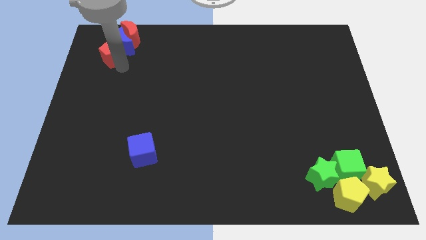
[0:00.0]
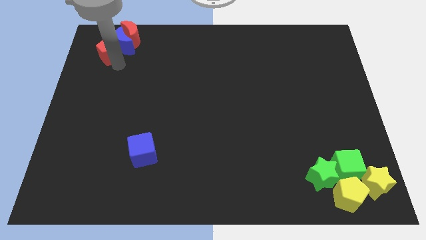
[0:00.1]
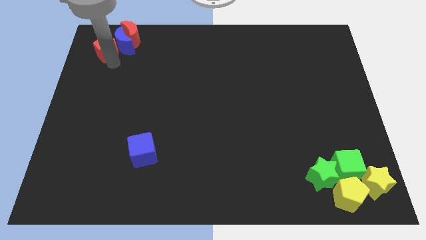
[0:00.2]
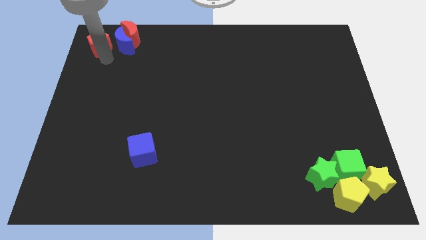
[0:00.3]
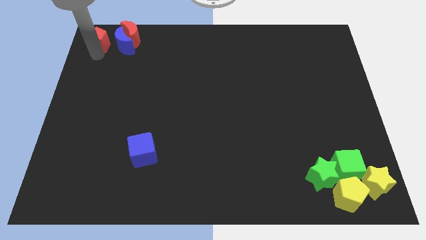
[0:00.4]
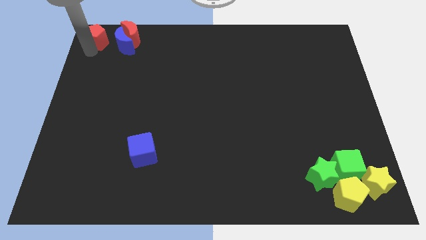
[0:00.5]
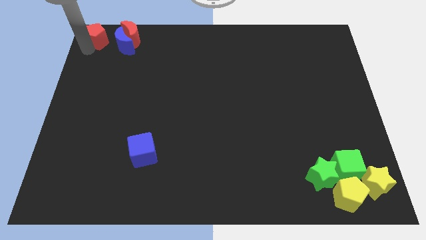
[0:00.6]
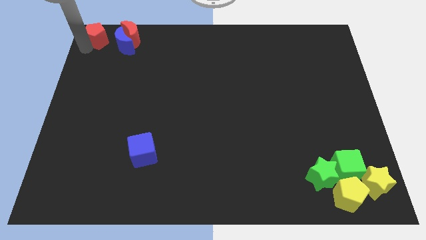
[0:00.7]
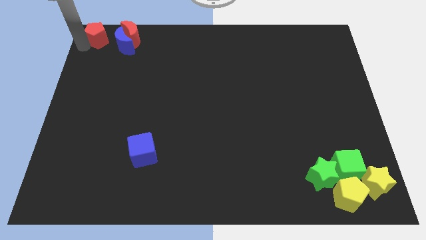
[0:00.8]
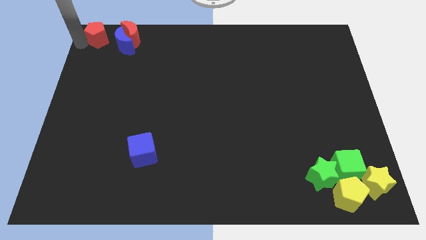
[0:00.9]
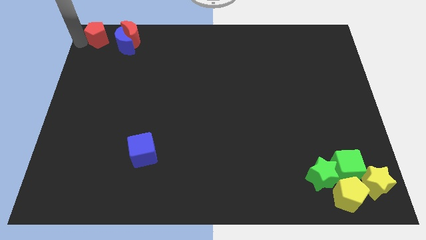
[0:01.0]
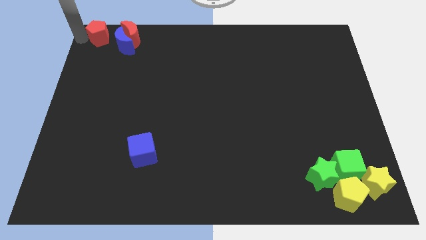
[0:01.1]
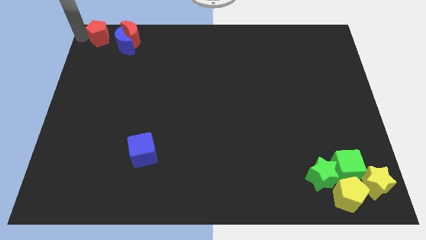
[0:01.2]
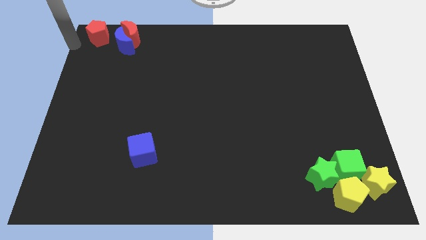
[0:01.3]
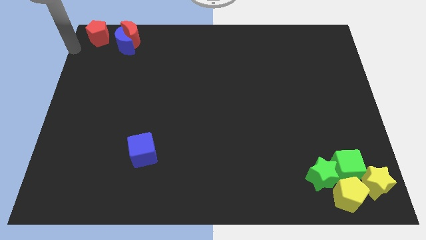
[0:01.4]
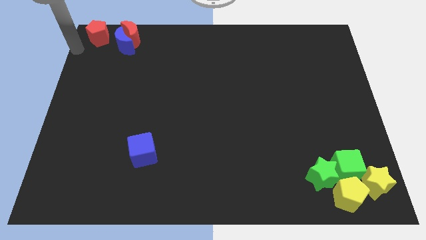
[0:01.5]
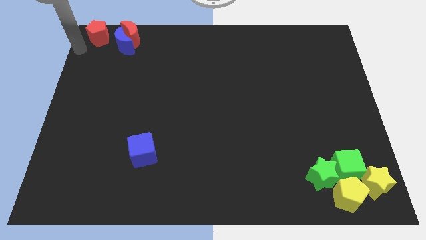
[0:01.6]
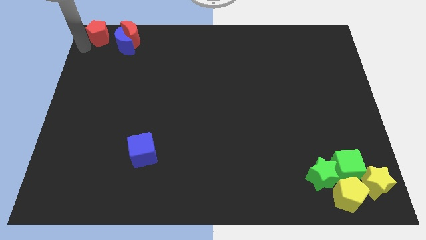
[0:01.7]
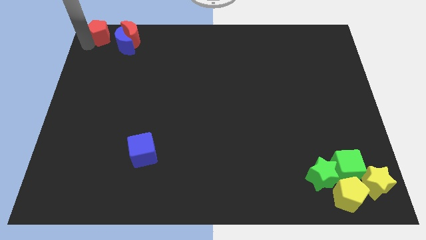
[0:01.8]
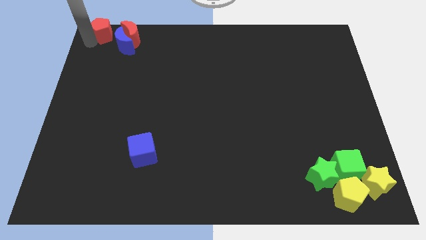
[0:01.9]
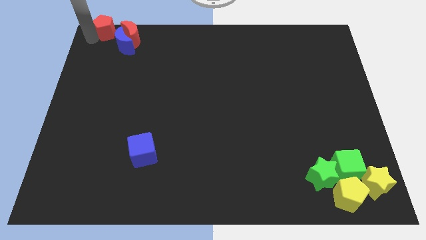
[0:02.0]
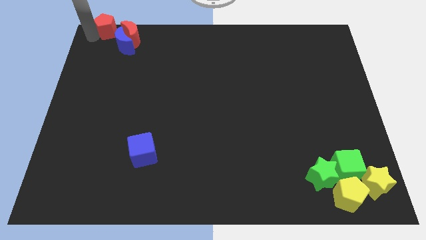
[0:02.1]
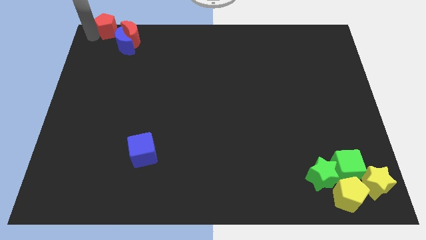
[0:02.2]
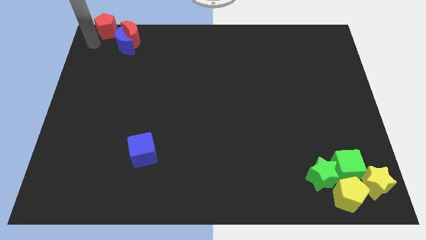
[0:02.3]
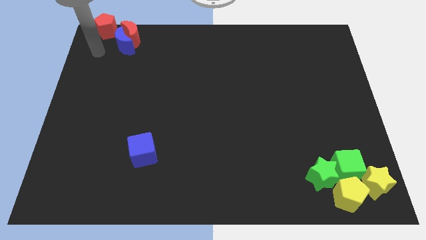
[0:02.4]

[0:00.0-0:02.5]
place the re pentagon above into the blue crescent

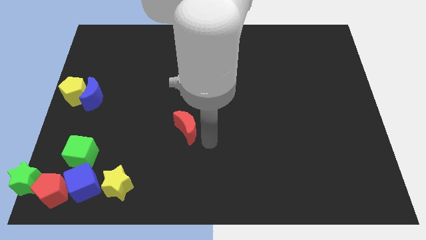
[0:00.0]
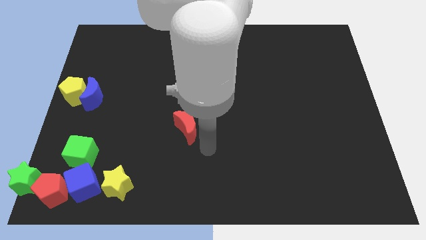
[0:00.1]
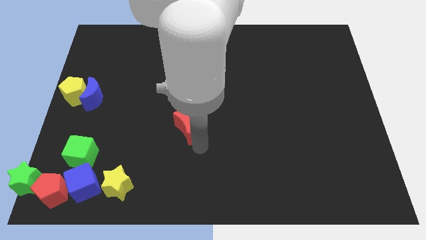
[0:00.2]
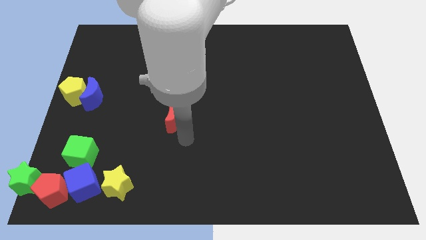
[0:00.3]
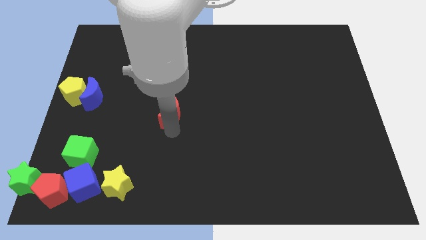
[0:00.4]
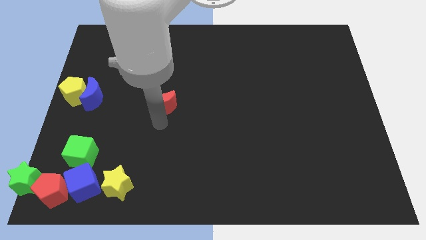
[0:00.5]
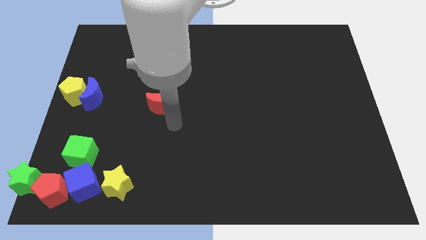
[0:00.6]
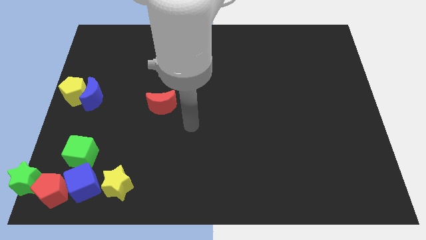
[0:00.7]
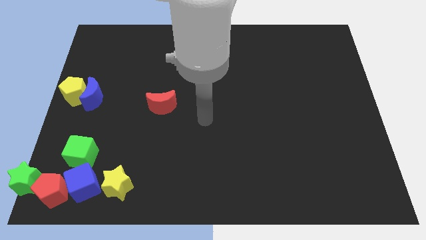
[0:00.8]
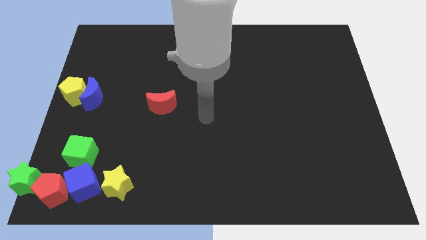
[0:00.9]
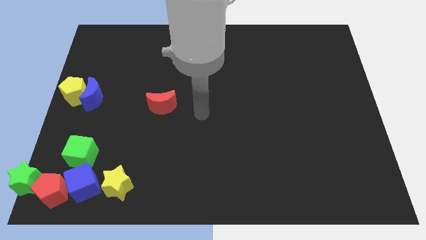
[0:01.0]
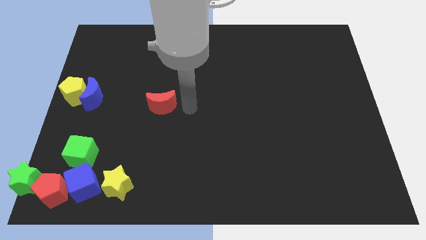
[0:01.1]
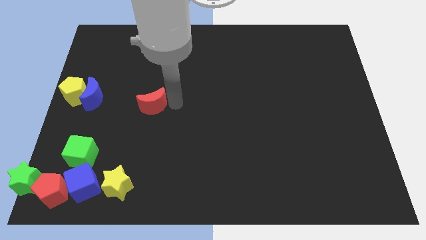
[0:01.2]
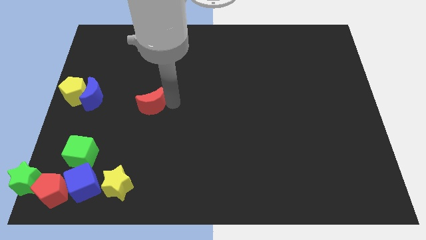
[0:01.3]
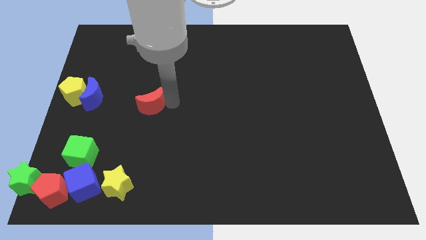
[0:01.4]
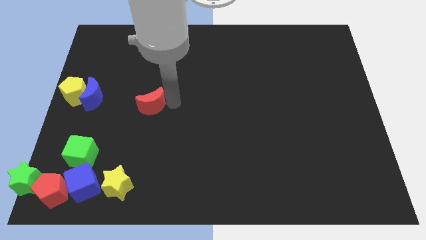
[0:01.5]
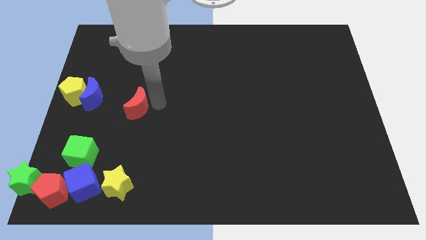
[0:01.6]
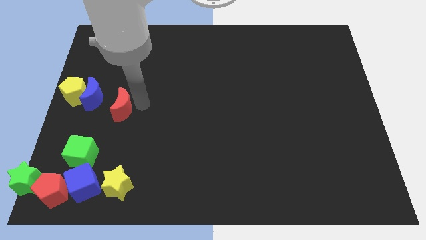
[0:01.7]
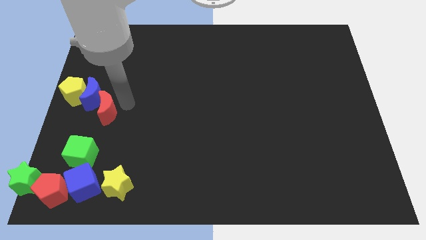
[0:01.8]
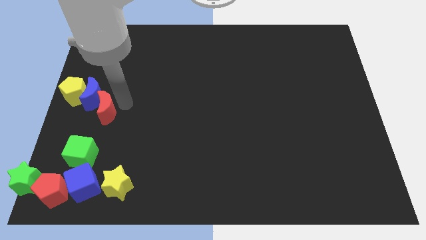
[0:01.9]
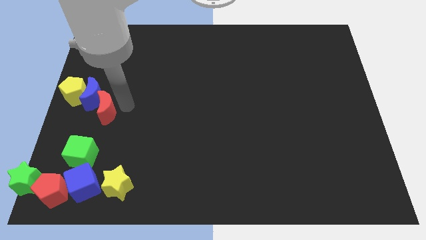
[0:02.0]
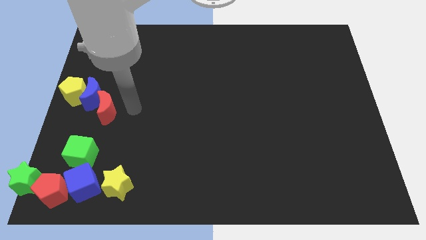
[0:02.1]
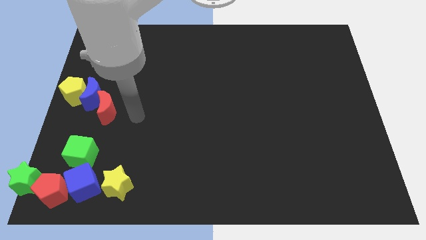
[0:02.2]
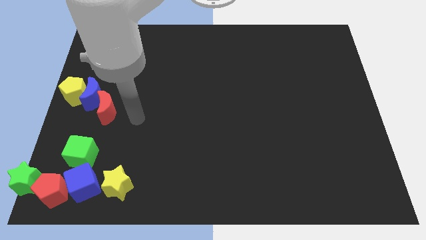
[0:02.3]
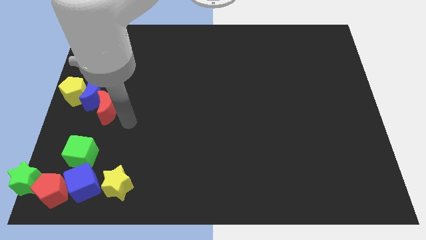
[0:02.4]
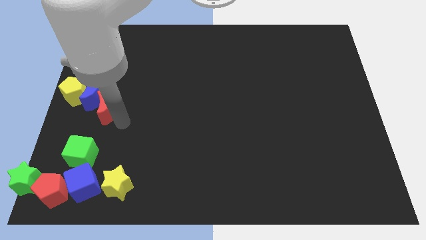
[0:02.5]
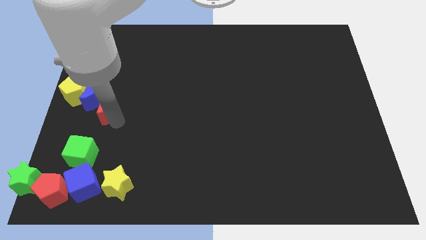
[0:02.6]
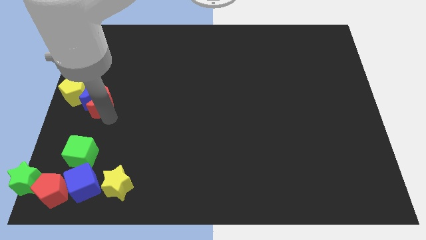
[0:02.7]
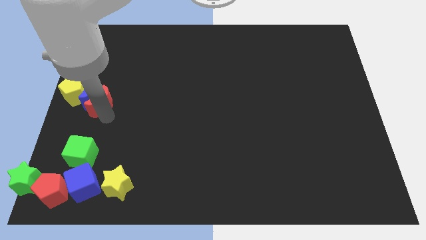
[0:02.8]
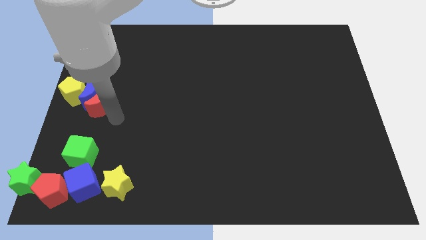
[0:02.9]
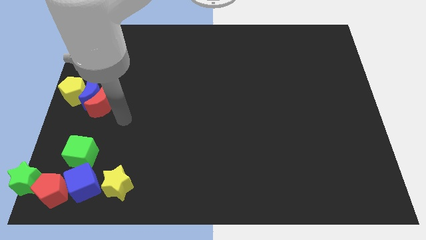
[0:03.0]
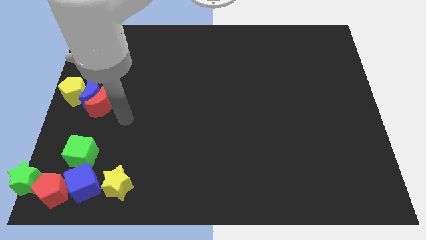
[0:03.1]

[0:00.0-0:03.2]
put the red crescent to the right of the blue crescent

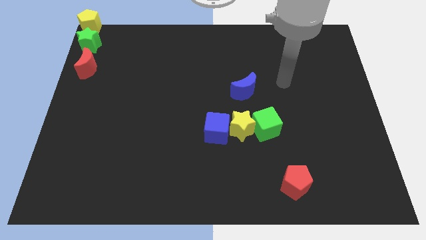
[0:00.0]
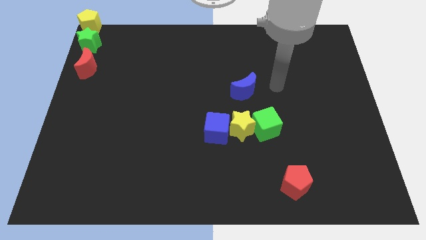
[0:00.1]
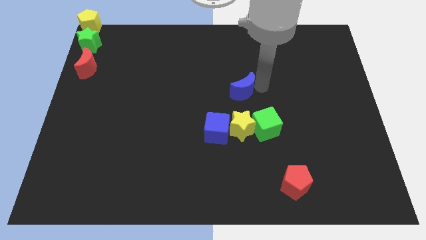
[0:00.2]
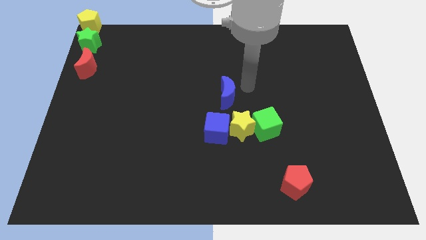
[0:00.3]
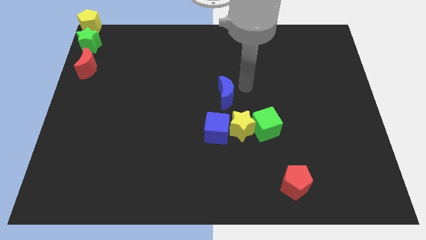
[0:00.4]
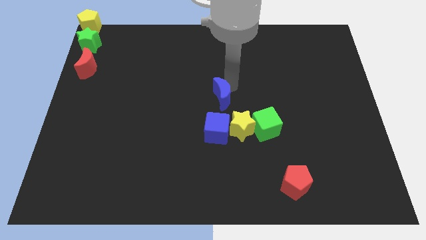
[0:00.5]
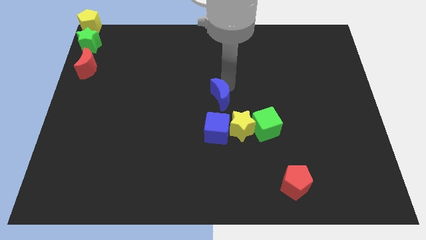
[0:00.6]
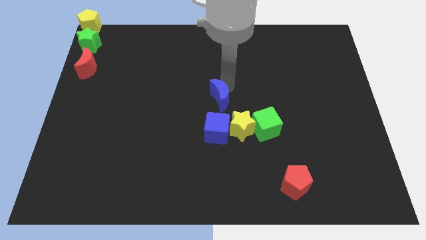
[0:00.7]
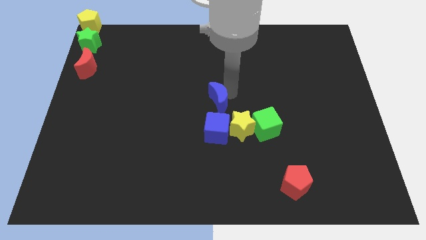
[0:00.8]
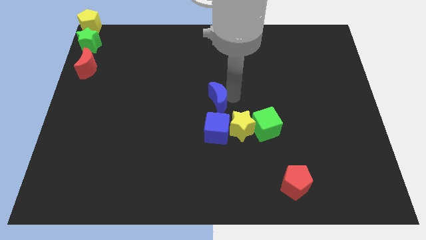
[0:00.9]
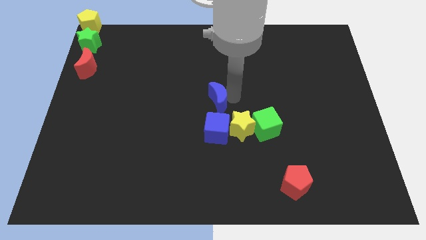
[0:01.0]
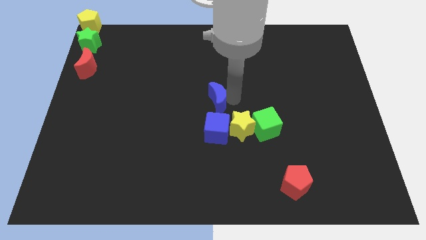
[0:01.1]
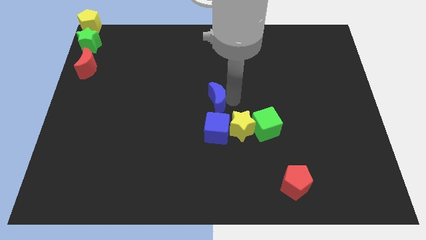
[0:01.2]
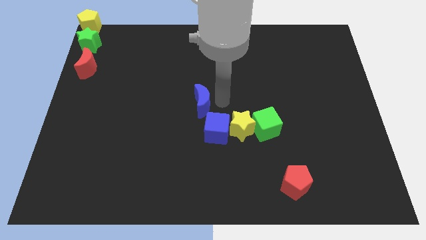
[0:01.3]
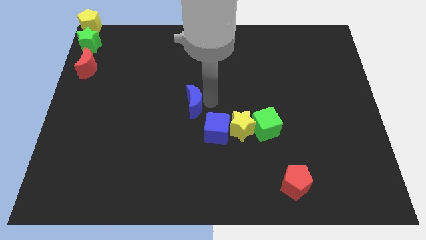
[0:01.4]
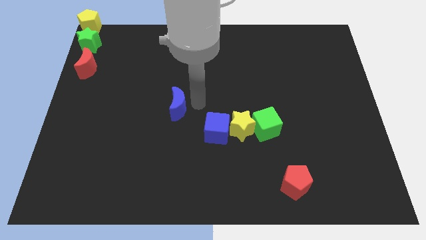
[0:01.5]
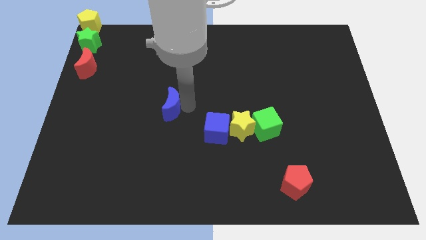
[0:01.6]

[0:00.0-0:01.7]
put the blue moon diagonally top left to the blue cube

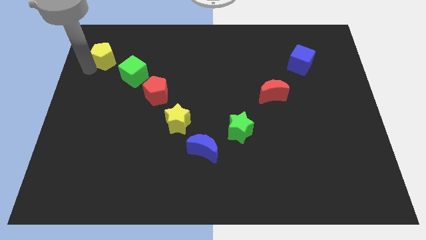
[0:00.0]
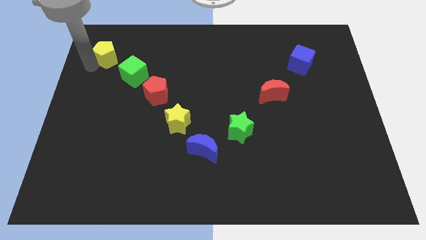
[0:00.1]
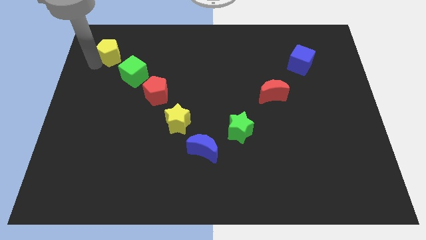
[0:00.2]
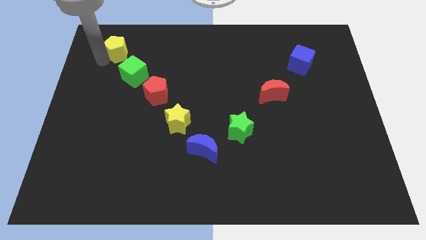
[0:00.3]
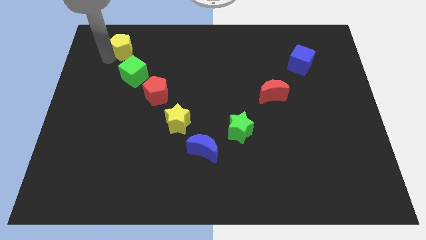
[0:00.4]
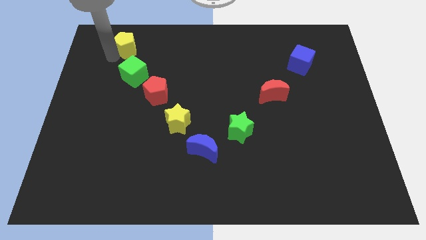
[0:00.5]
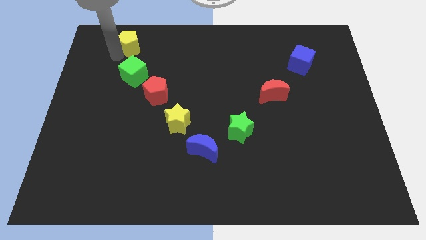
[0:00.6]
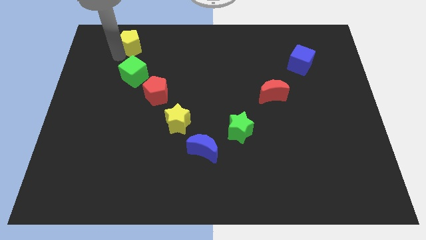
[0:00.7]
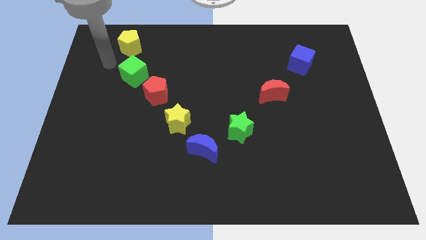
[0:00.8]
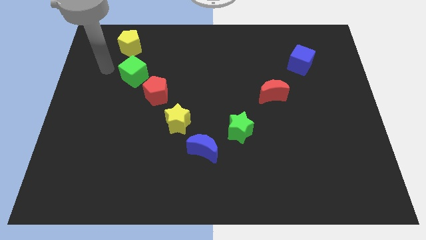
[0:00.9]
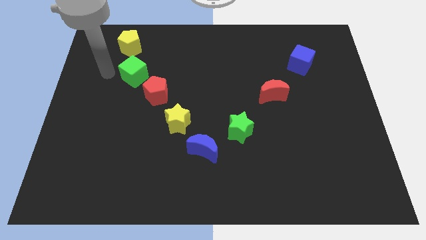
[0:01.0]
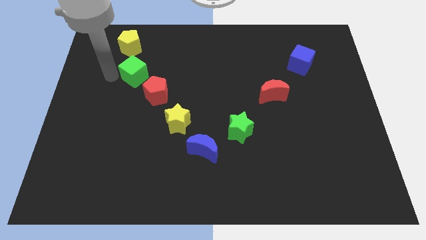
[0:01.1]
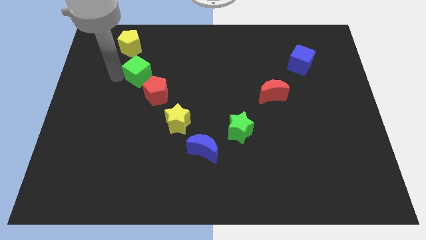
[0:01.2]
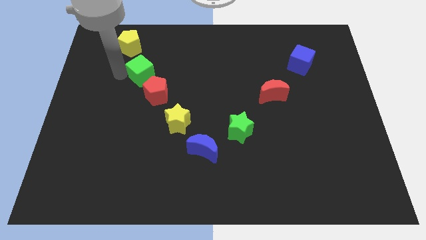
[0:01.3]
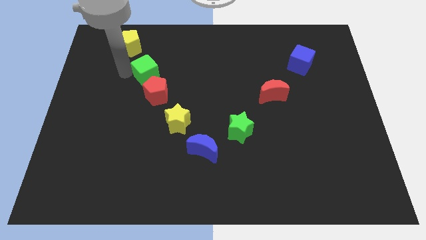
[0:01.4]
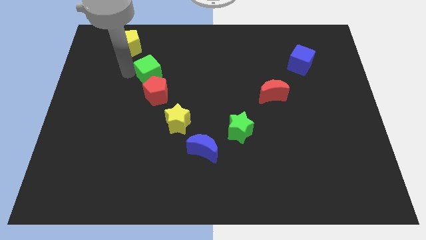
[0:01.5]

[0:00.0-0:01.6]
move yellow pentagon slightly up

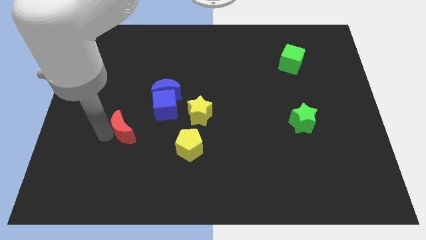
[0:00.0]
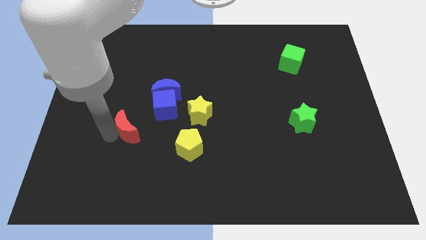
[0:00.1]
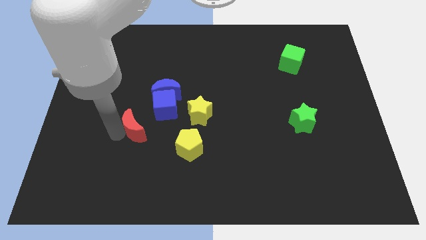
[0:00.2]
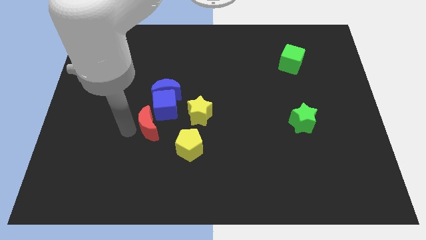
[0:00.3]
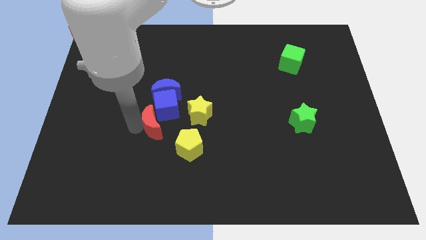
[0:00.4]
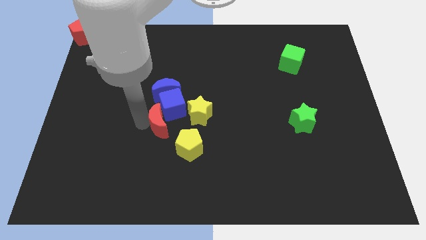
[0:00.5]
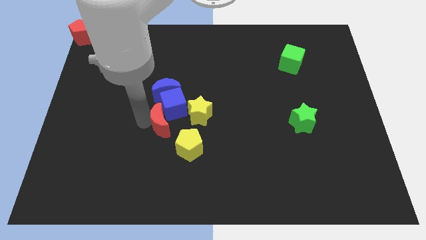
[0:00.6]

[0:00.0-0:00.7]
push the red moon into the blue cube
